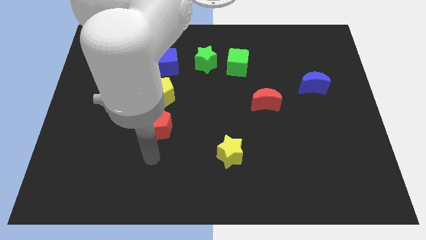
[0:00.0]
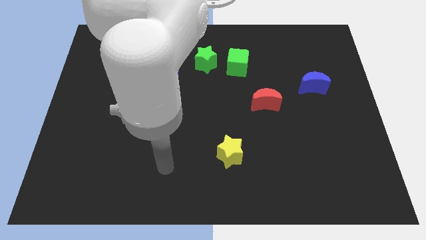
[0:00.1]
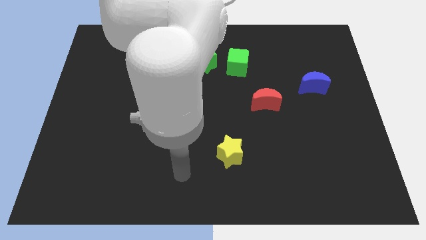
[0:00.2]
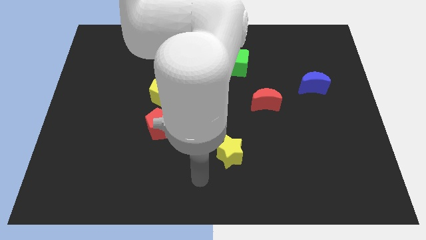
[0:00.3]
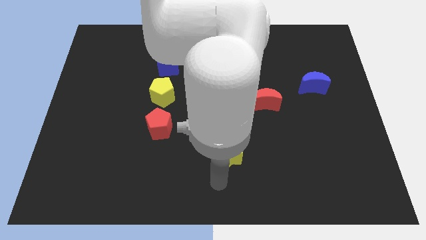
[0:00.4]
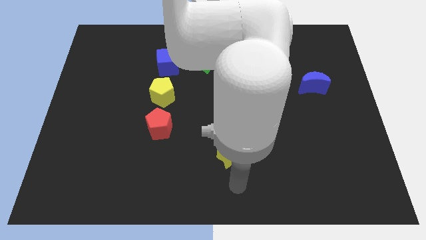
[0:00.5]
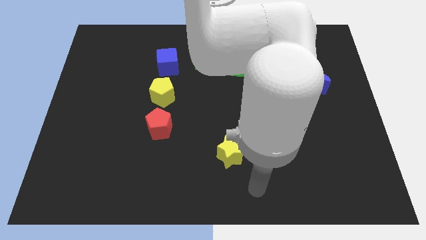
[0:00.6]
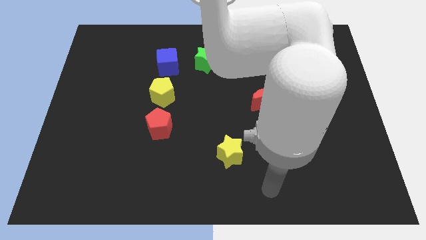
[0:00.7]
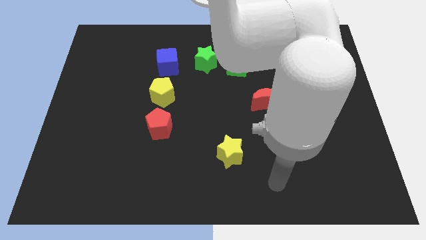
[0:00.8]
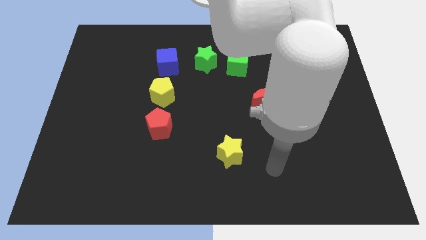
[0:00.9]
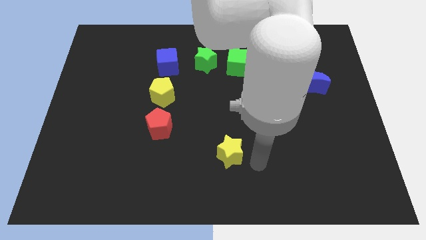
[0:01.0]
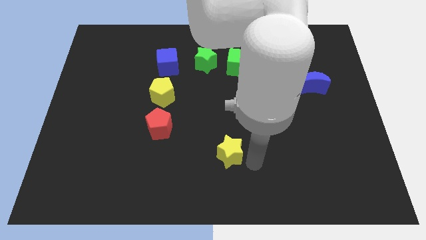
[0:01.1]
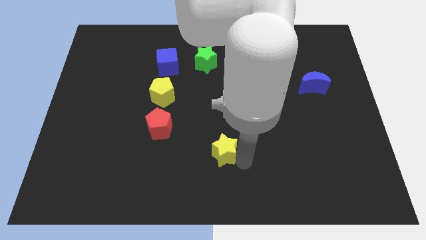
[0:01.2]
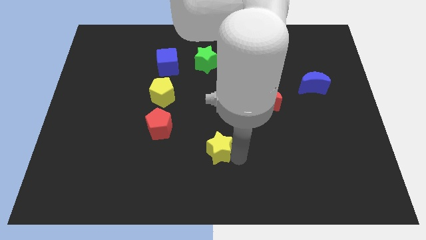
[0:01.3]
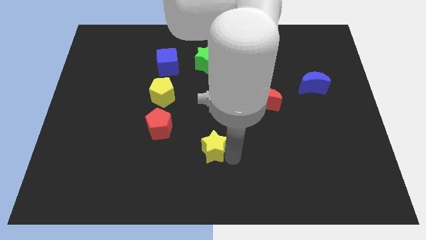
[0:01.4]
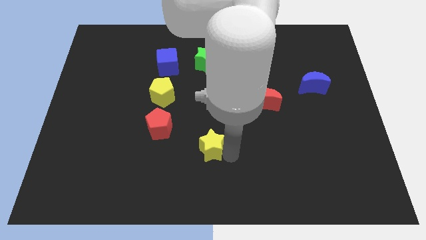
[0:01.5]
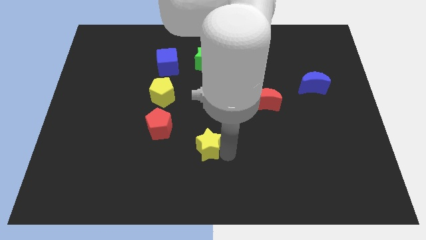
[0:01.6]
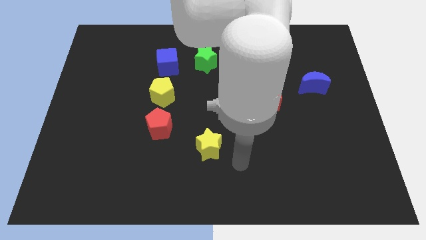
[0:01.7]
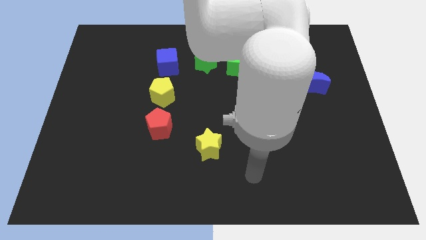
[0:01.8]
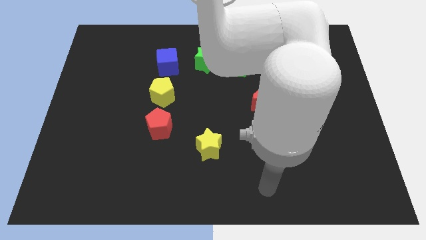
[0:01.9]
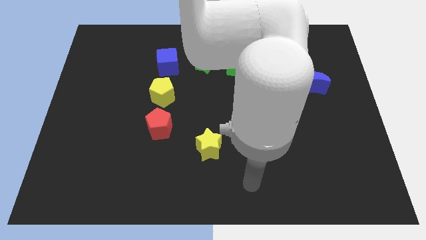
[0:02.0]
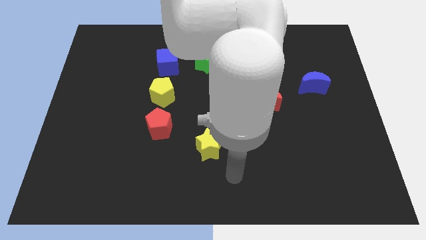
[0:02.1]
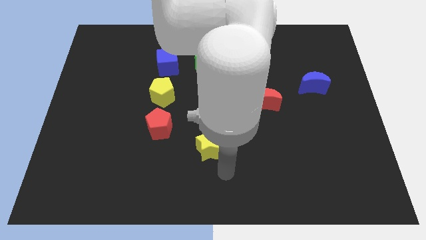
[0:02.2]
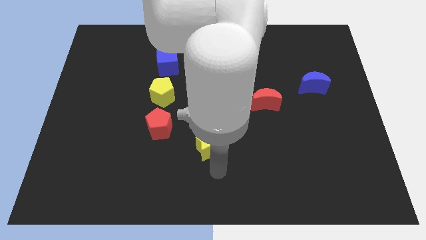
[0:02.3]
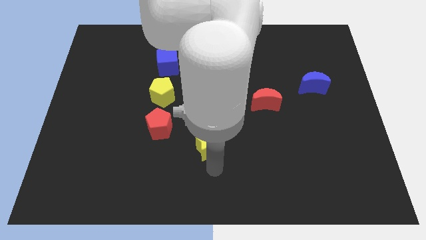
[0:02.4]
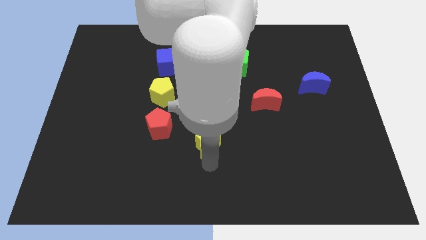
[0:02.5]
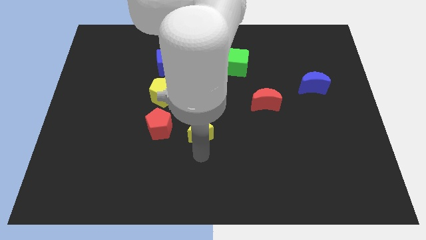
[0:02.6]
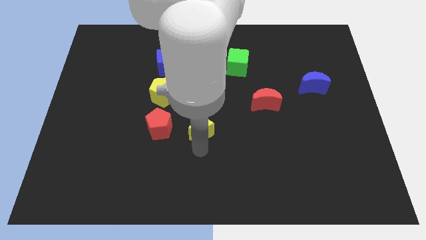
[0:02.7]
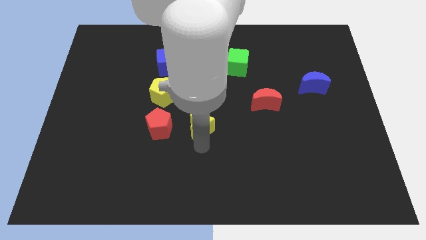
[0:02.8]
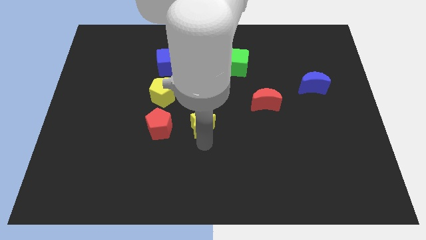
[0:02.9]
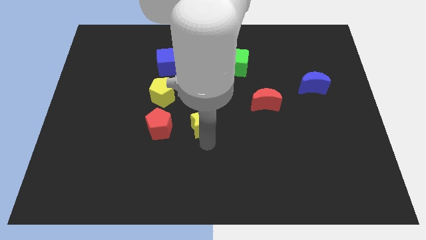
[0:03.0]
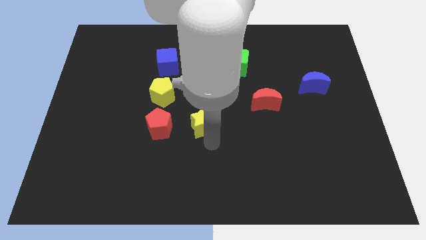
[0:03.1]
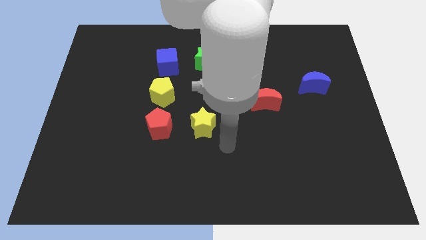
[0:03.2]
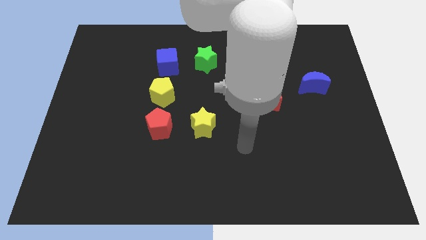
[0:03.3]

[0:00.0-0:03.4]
push the yellow star towards the center of the board

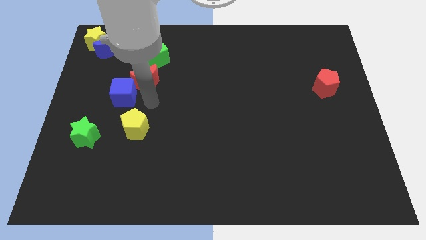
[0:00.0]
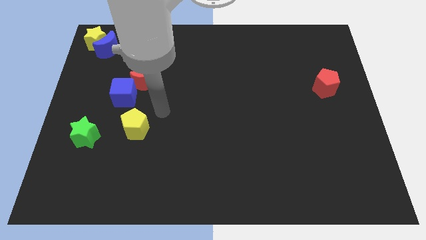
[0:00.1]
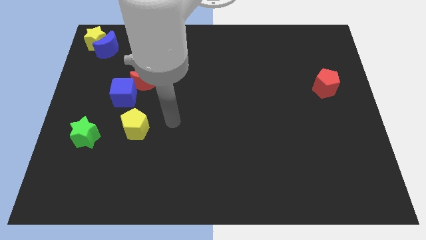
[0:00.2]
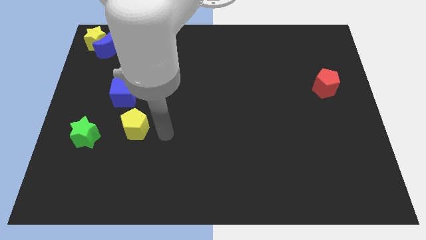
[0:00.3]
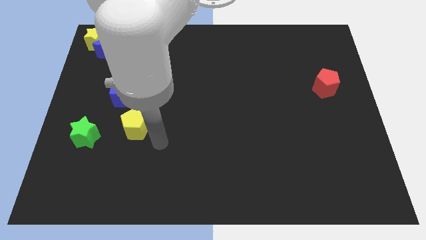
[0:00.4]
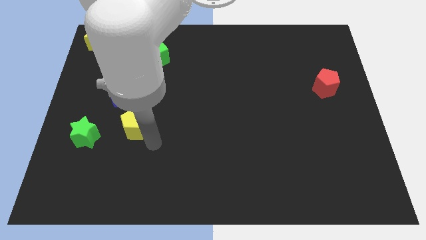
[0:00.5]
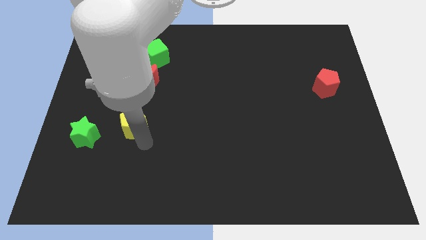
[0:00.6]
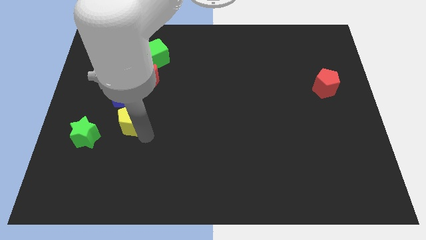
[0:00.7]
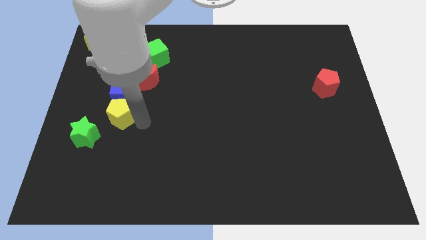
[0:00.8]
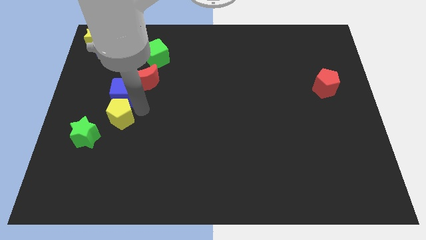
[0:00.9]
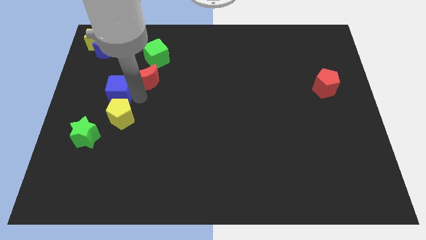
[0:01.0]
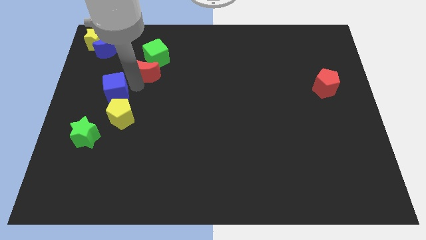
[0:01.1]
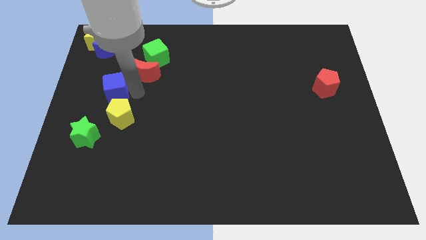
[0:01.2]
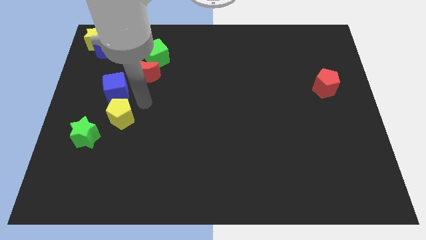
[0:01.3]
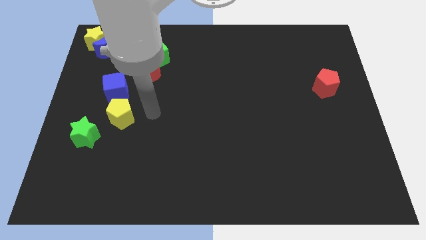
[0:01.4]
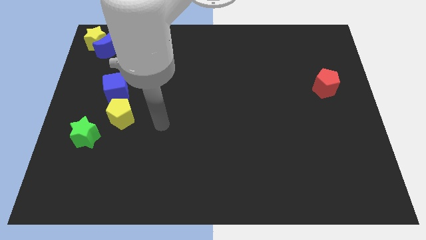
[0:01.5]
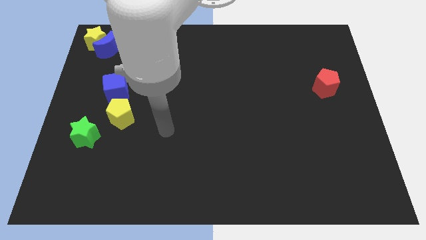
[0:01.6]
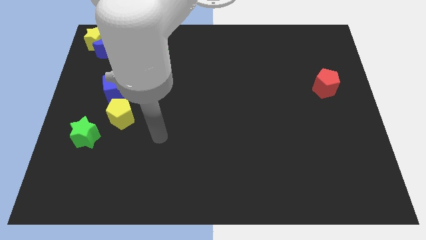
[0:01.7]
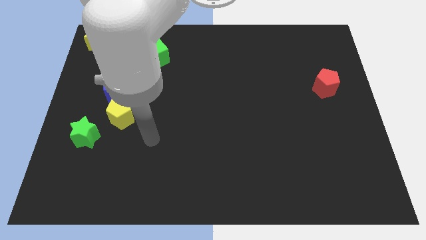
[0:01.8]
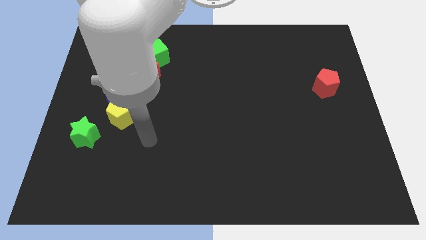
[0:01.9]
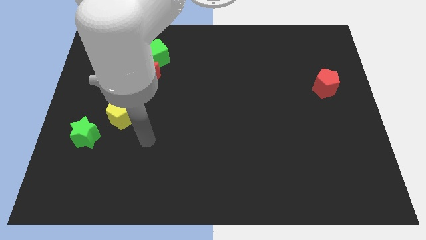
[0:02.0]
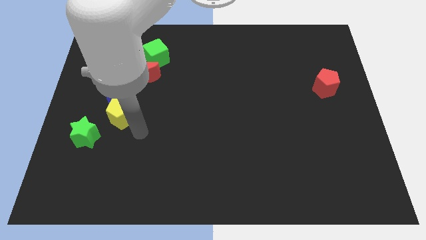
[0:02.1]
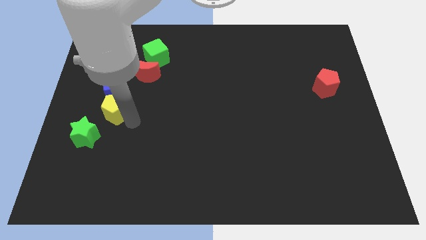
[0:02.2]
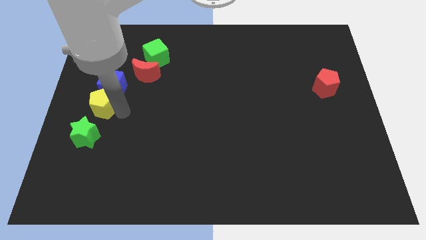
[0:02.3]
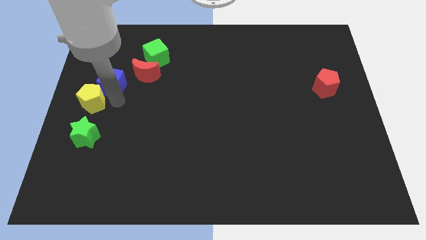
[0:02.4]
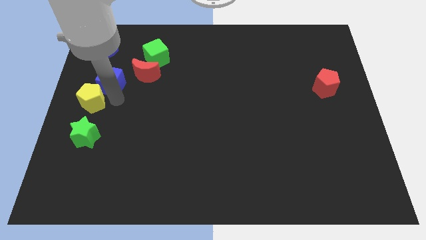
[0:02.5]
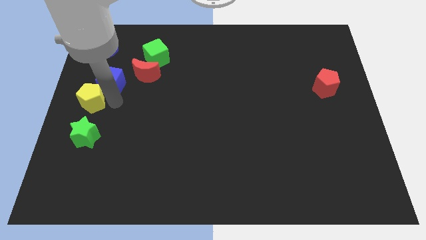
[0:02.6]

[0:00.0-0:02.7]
move the yellow pentagon into the blue cube

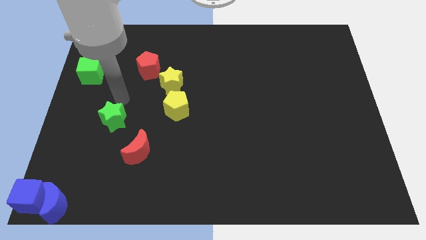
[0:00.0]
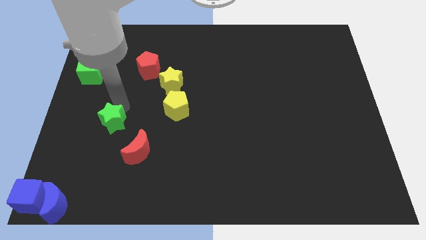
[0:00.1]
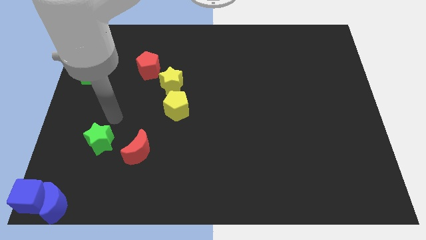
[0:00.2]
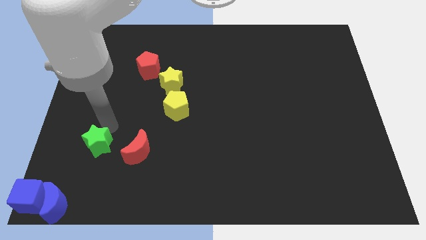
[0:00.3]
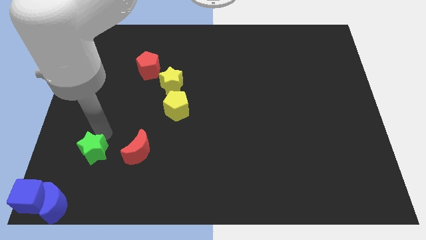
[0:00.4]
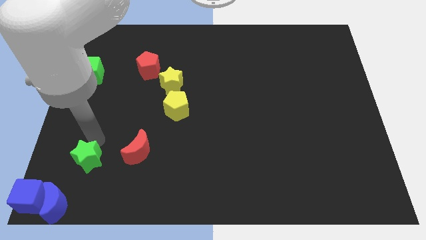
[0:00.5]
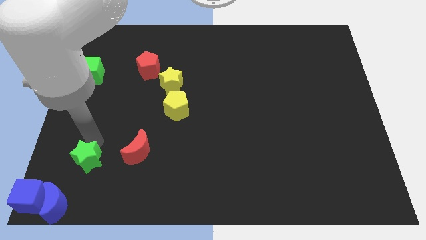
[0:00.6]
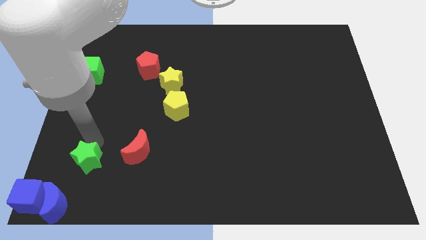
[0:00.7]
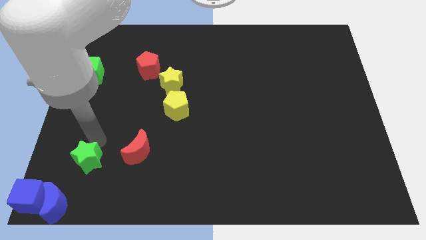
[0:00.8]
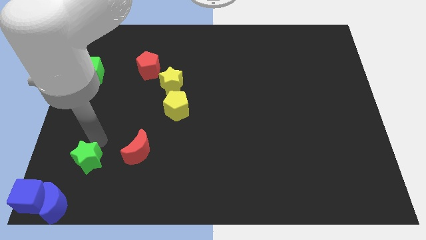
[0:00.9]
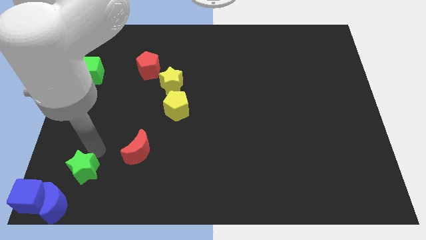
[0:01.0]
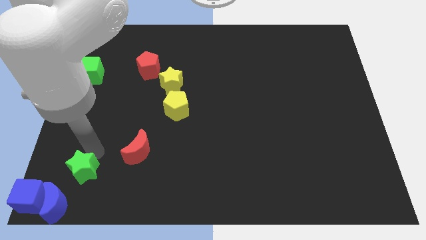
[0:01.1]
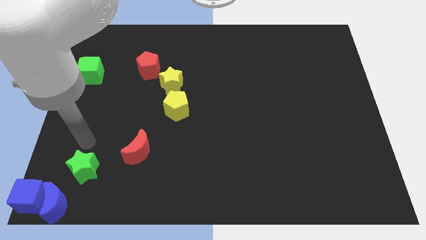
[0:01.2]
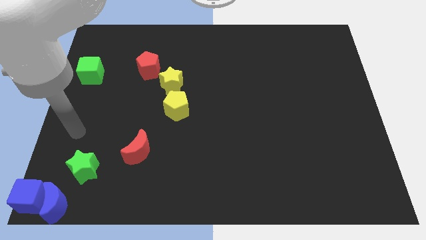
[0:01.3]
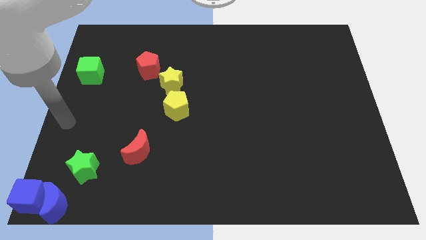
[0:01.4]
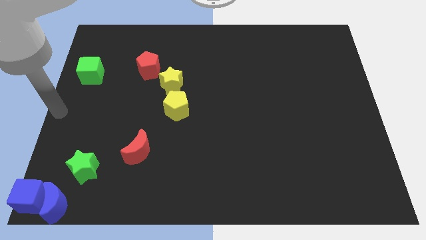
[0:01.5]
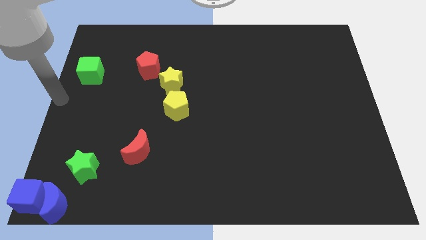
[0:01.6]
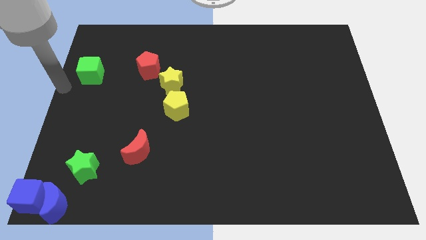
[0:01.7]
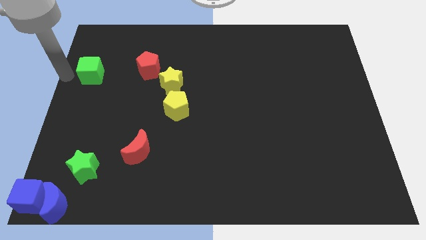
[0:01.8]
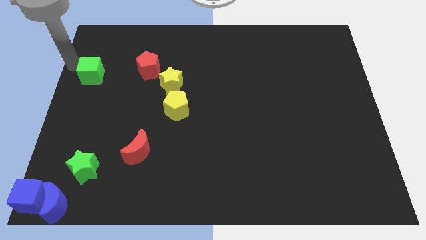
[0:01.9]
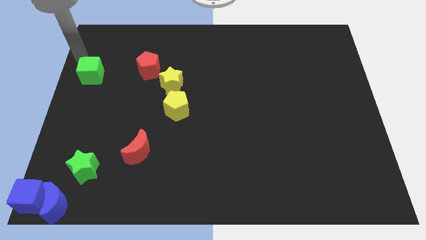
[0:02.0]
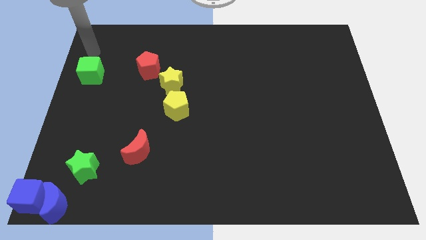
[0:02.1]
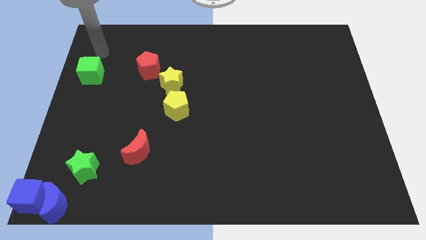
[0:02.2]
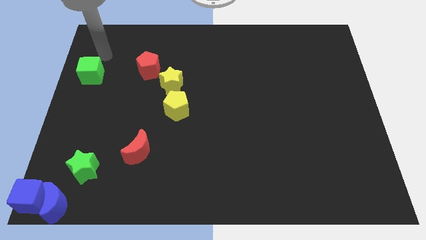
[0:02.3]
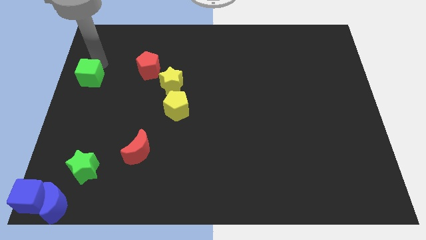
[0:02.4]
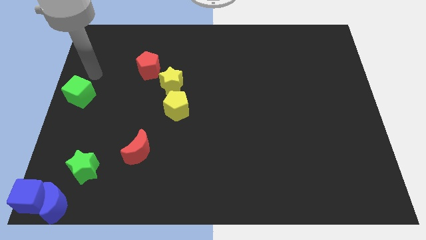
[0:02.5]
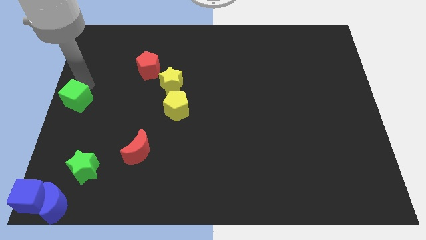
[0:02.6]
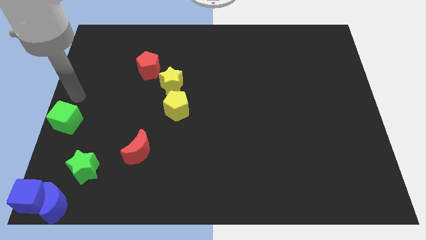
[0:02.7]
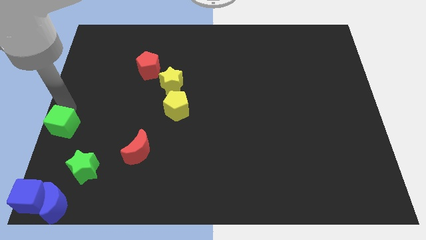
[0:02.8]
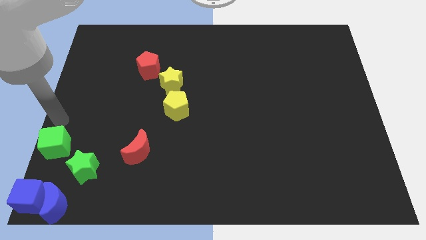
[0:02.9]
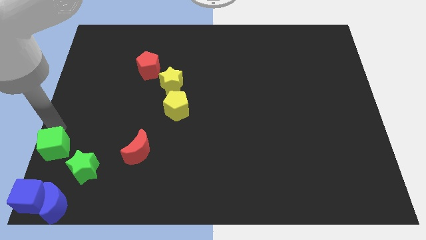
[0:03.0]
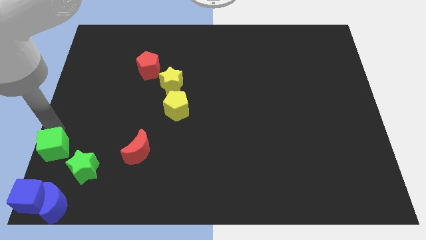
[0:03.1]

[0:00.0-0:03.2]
move green cube green star towards bottom center
